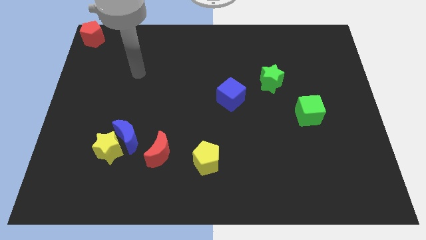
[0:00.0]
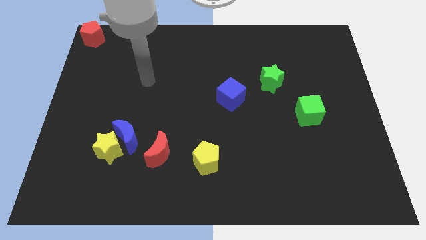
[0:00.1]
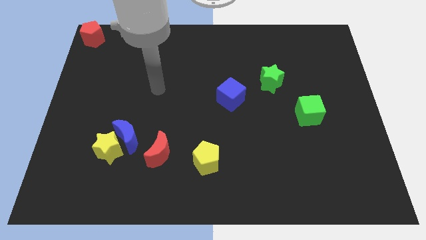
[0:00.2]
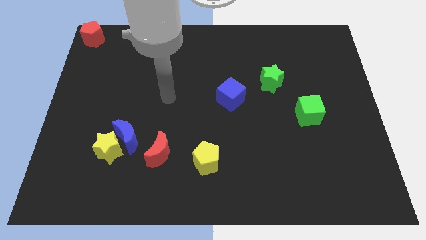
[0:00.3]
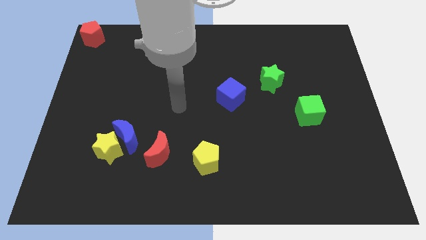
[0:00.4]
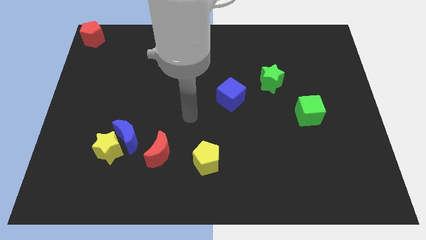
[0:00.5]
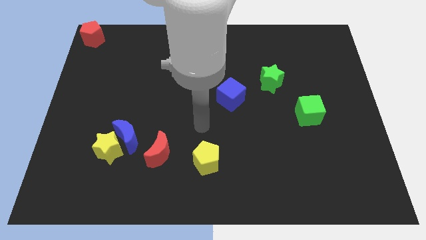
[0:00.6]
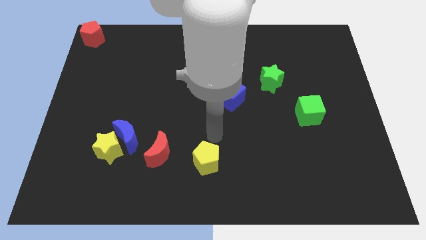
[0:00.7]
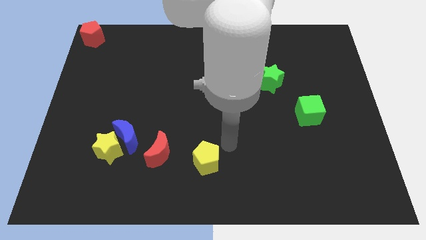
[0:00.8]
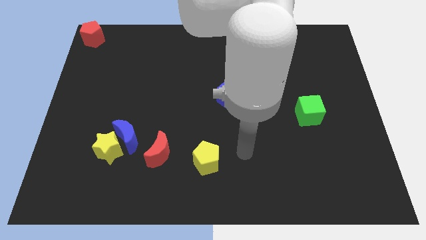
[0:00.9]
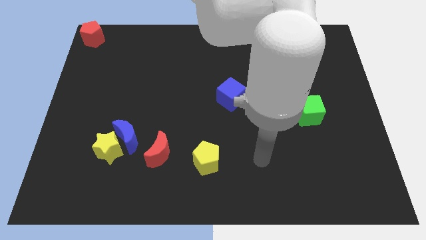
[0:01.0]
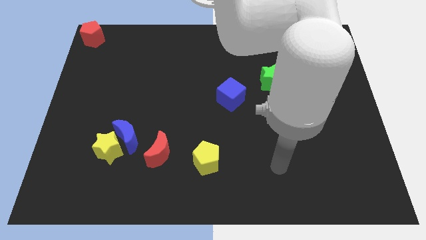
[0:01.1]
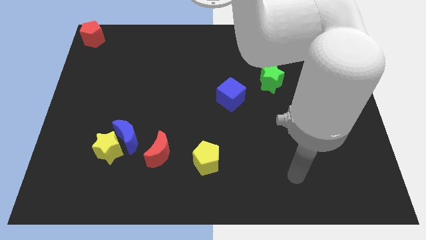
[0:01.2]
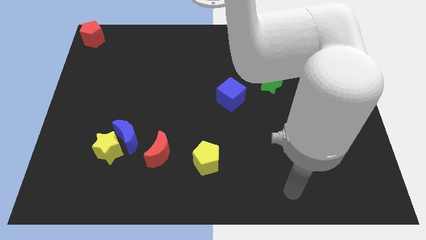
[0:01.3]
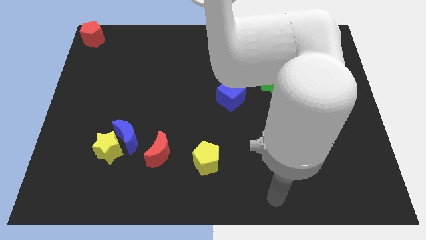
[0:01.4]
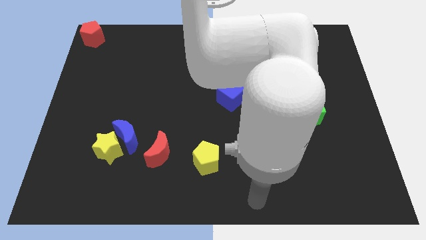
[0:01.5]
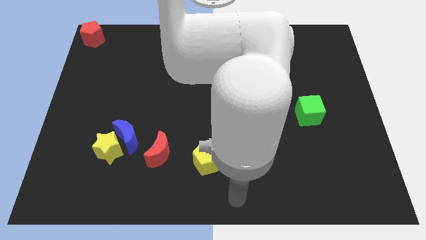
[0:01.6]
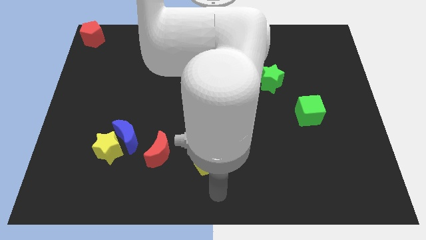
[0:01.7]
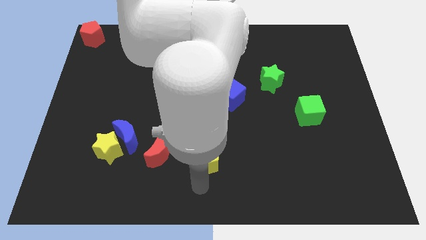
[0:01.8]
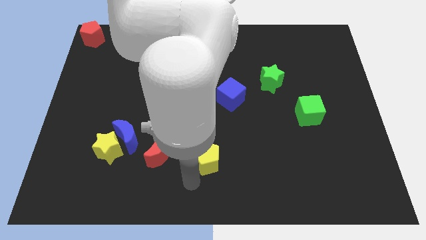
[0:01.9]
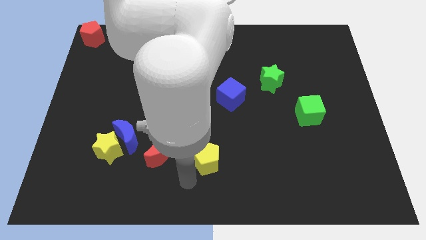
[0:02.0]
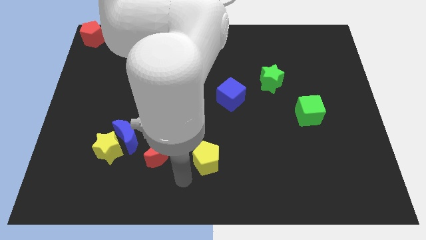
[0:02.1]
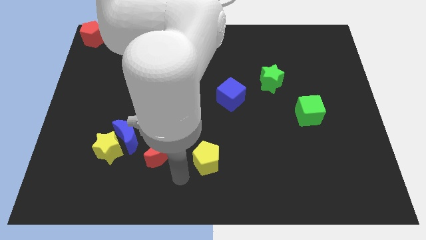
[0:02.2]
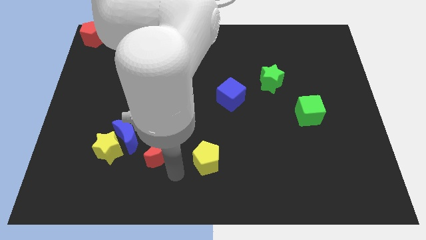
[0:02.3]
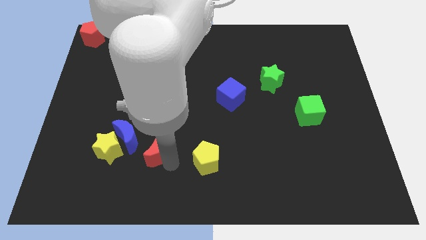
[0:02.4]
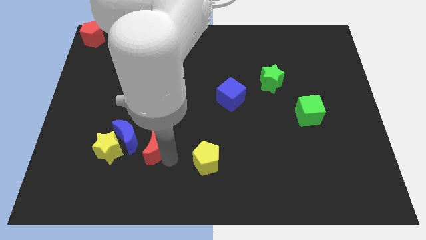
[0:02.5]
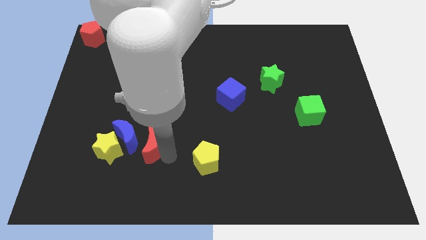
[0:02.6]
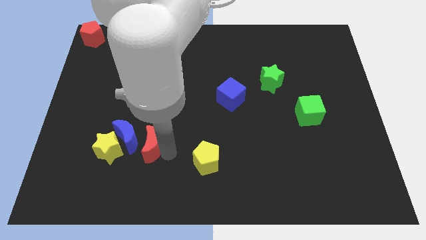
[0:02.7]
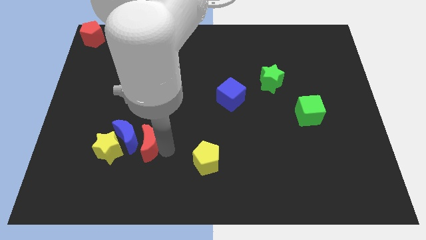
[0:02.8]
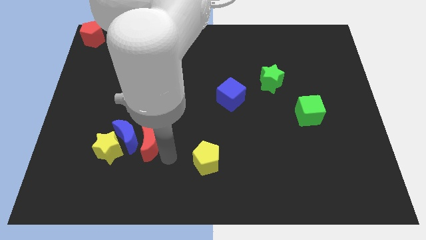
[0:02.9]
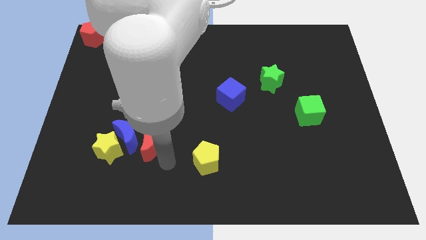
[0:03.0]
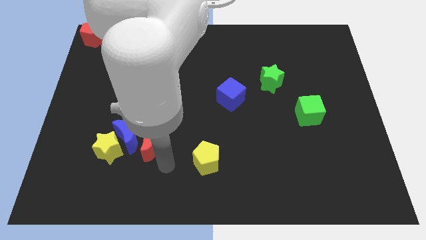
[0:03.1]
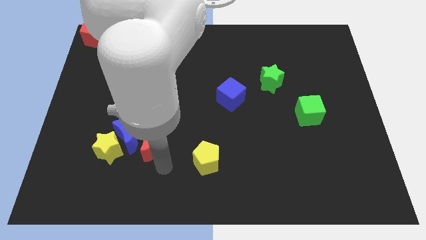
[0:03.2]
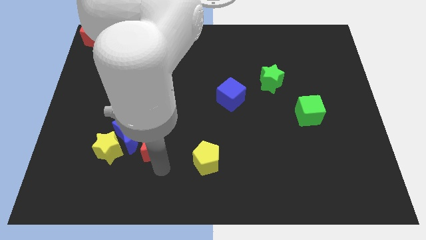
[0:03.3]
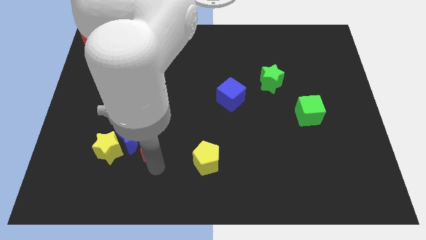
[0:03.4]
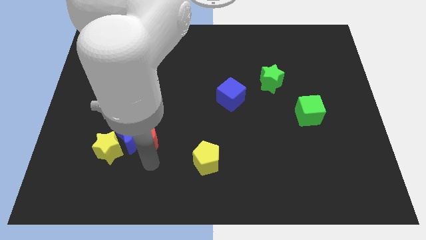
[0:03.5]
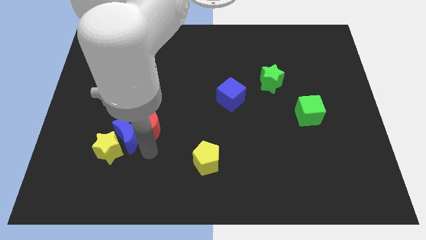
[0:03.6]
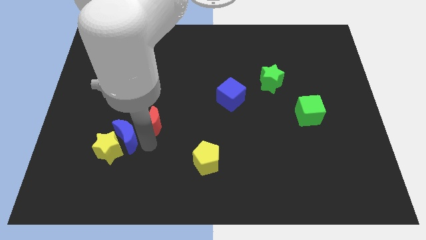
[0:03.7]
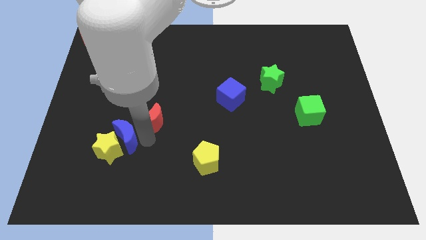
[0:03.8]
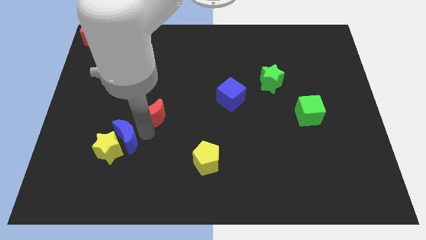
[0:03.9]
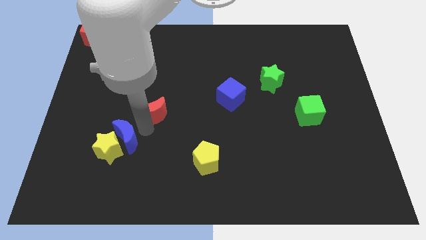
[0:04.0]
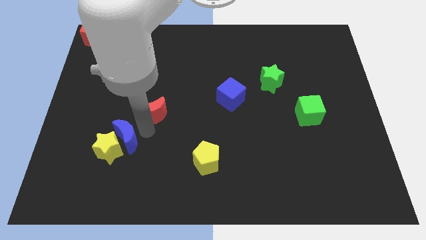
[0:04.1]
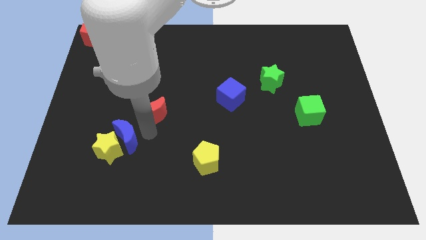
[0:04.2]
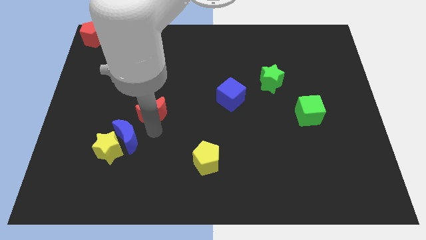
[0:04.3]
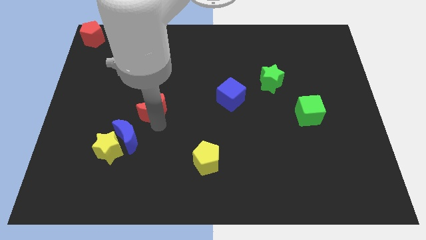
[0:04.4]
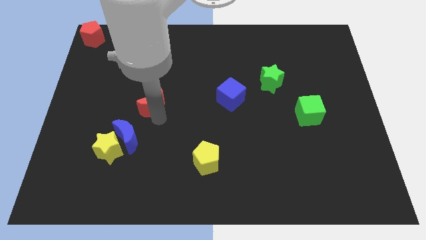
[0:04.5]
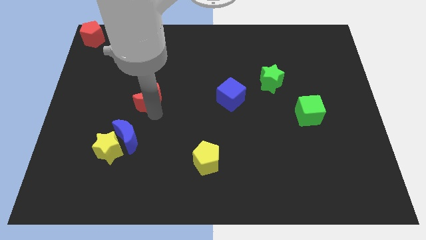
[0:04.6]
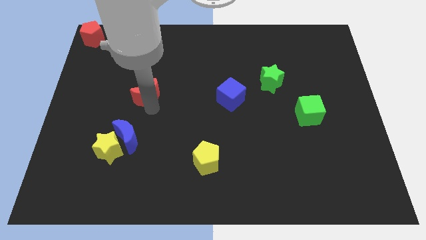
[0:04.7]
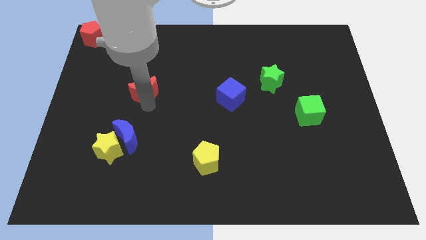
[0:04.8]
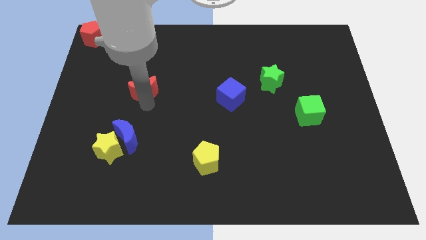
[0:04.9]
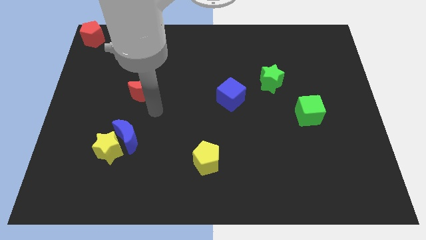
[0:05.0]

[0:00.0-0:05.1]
push the red crescent slightly to the top

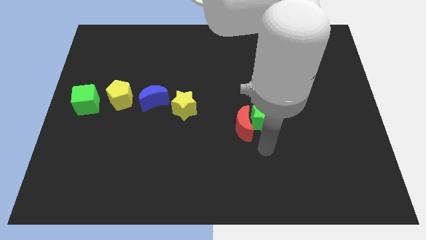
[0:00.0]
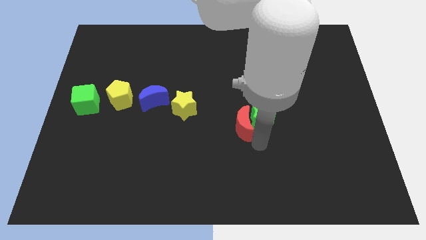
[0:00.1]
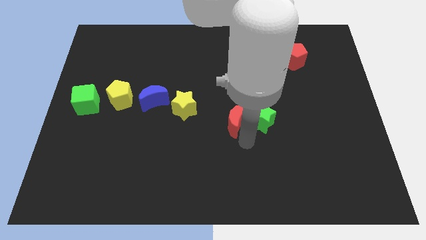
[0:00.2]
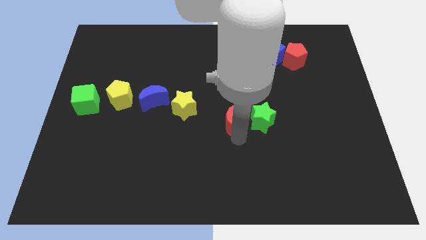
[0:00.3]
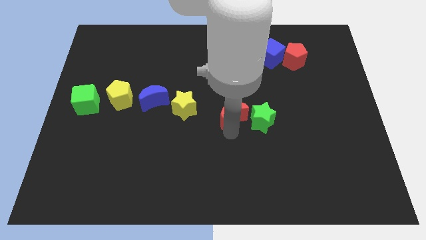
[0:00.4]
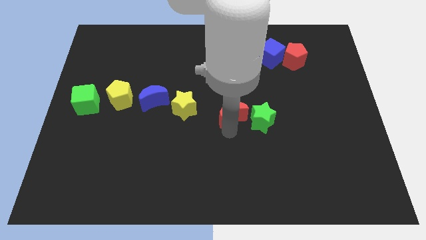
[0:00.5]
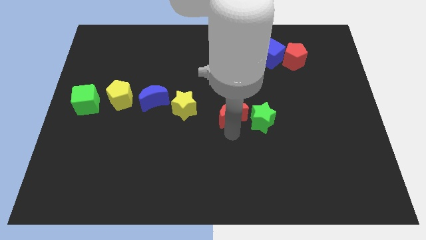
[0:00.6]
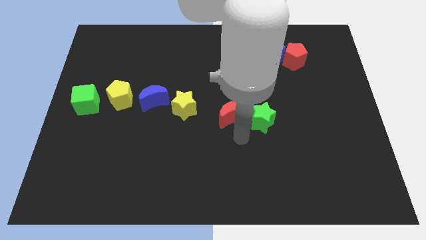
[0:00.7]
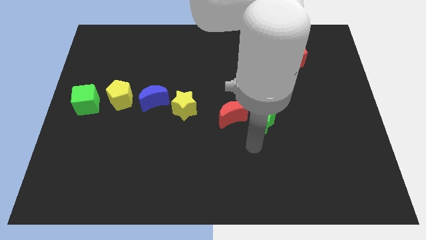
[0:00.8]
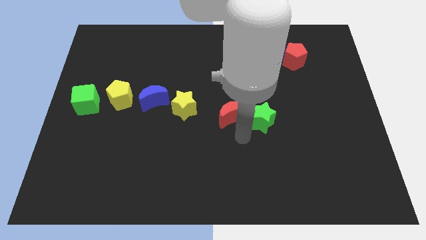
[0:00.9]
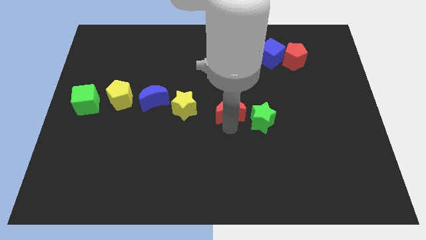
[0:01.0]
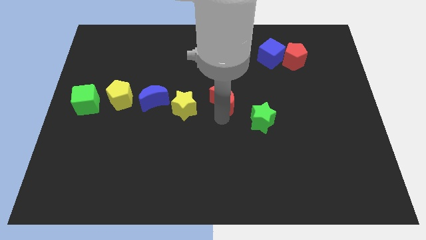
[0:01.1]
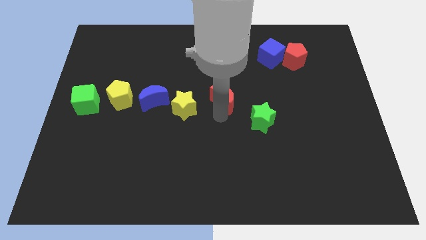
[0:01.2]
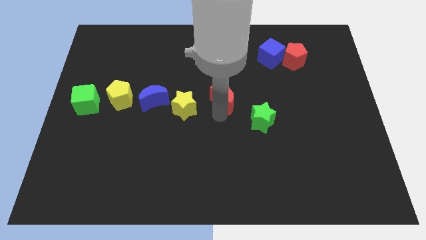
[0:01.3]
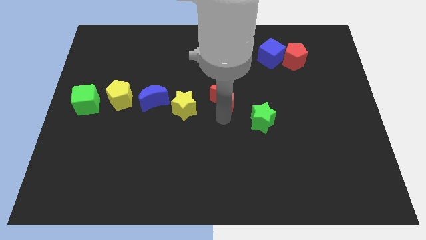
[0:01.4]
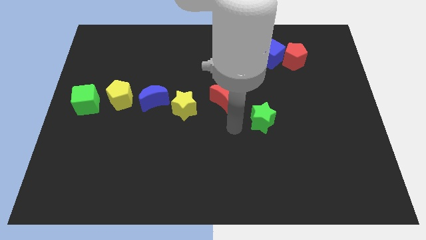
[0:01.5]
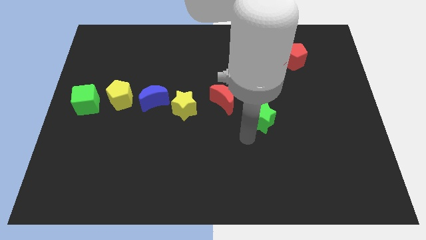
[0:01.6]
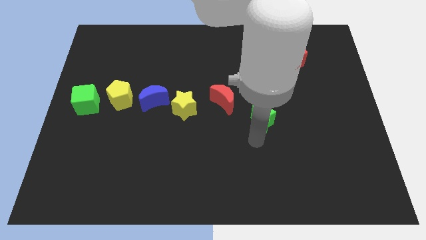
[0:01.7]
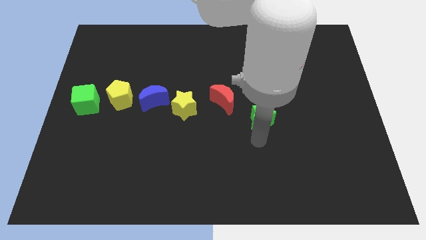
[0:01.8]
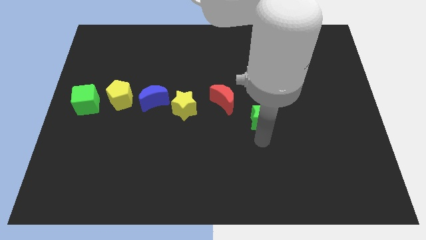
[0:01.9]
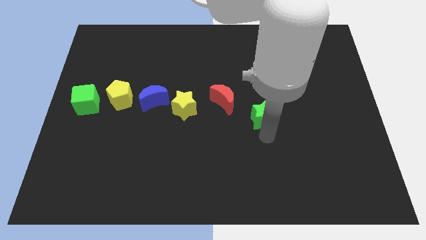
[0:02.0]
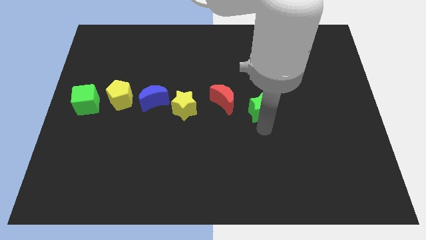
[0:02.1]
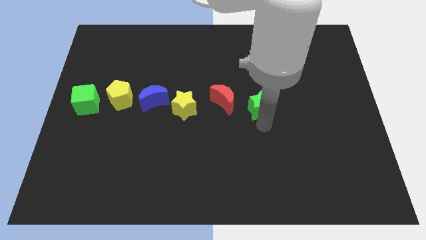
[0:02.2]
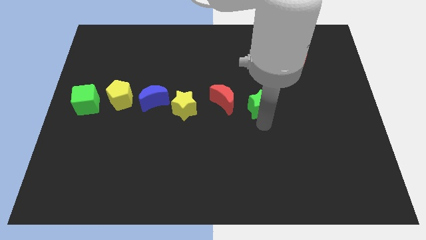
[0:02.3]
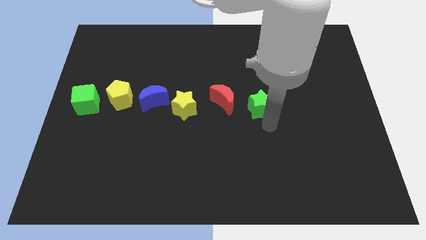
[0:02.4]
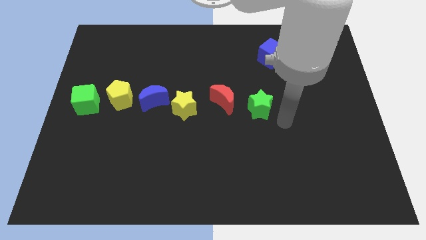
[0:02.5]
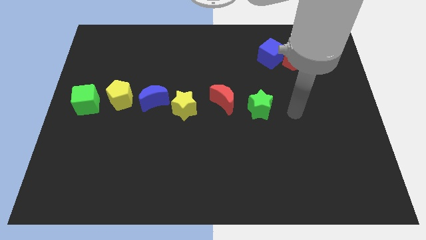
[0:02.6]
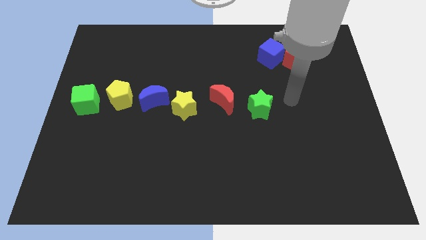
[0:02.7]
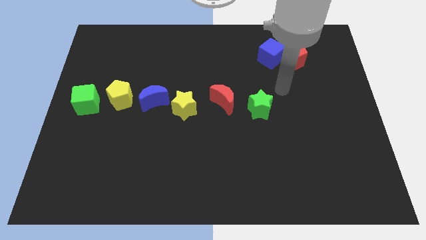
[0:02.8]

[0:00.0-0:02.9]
slightly move the green star towards the top of the board

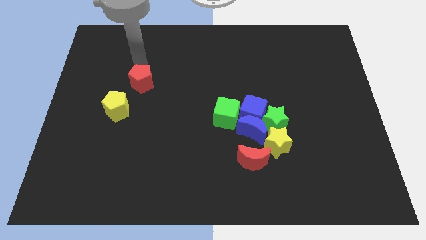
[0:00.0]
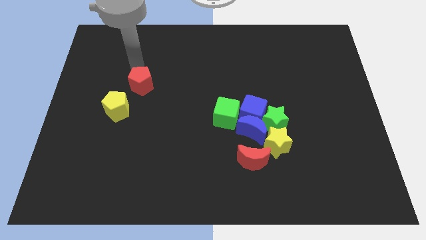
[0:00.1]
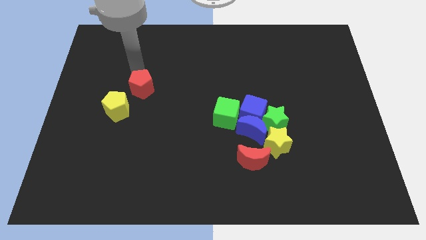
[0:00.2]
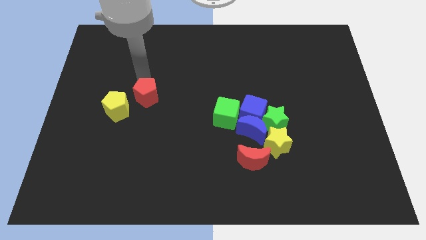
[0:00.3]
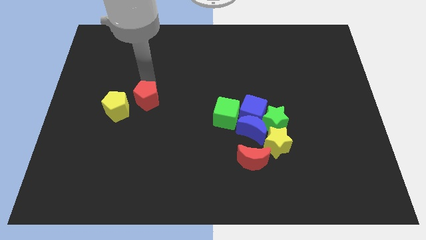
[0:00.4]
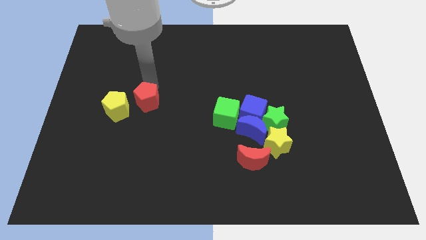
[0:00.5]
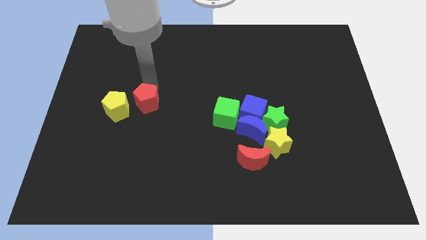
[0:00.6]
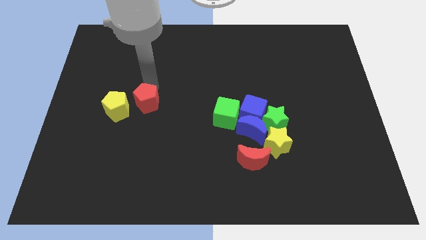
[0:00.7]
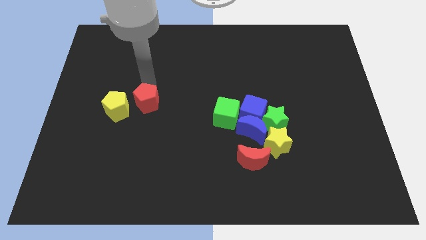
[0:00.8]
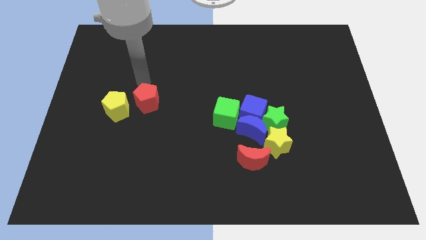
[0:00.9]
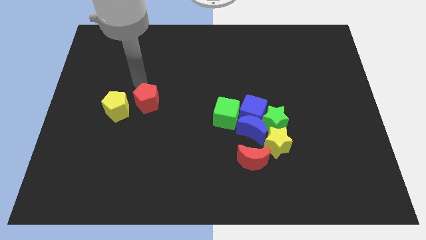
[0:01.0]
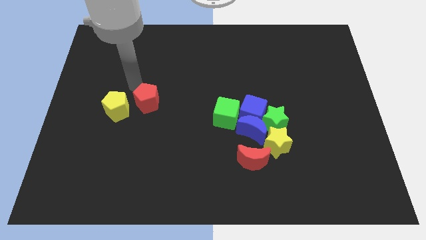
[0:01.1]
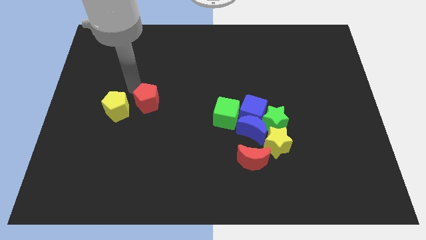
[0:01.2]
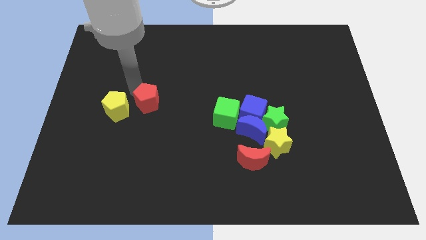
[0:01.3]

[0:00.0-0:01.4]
place the red pentagon to the right of the yellow pentagon
